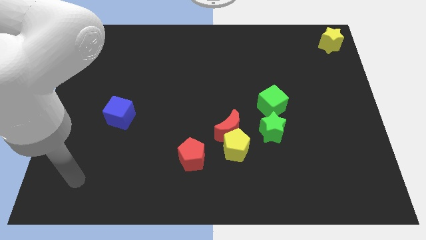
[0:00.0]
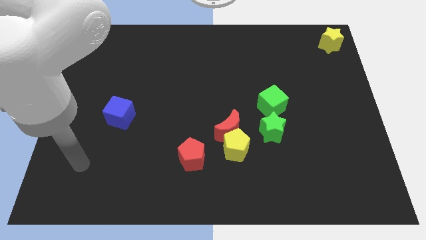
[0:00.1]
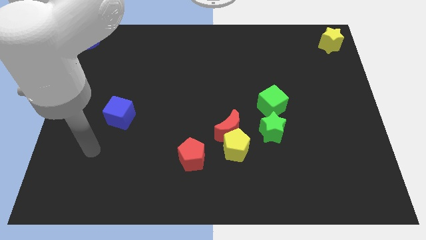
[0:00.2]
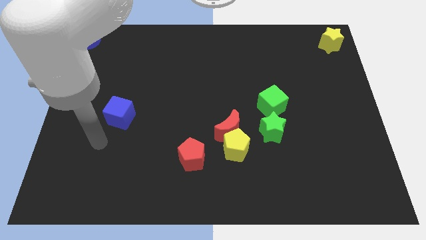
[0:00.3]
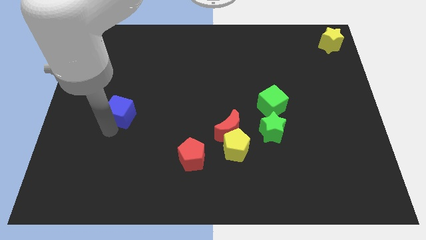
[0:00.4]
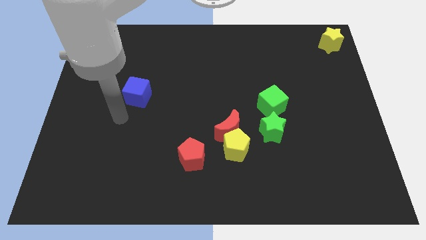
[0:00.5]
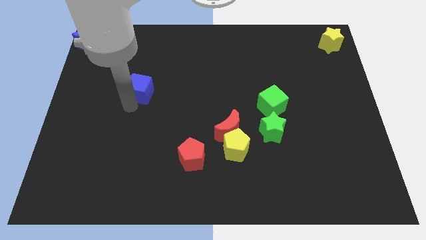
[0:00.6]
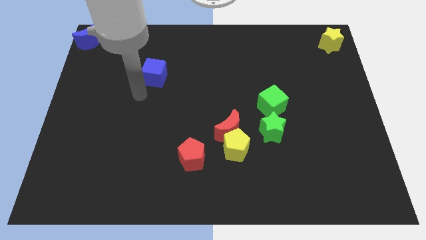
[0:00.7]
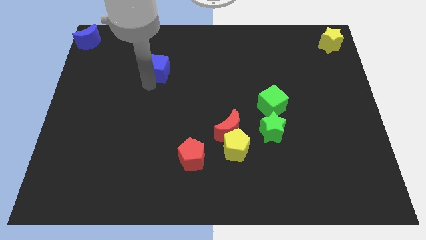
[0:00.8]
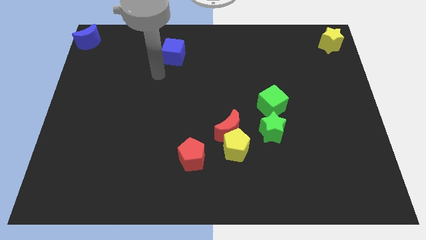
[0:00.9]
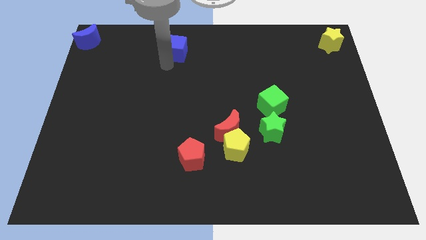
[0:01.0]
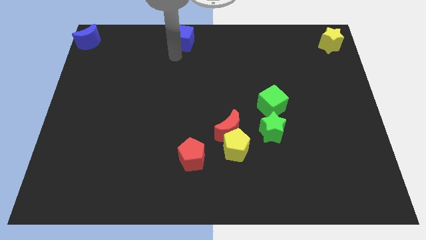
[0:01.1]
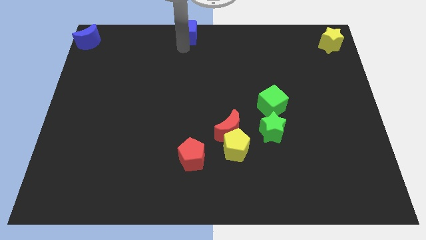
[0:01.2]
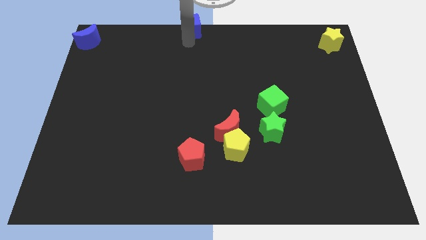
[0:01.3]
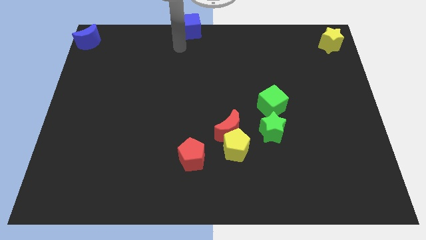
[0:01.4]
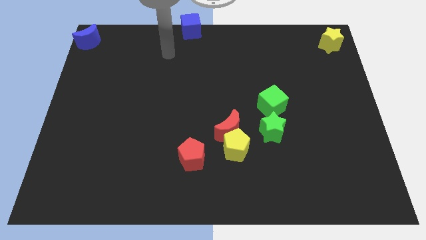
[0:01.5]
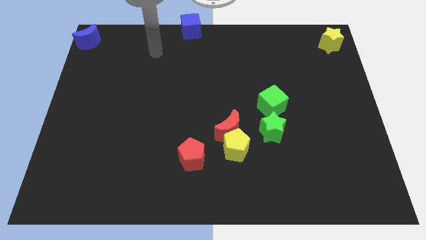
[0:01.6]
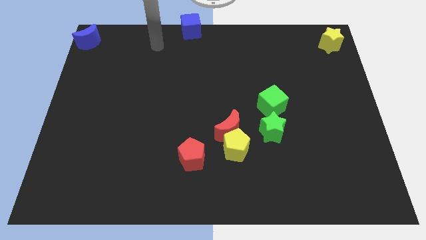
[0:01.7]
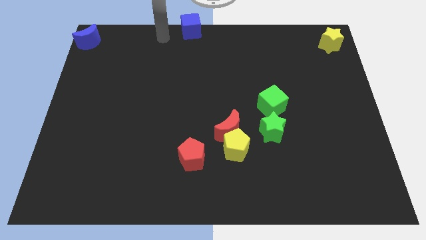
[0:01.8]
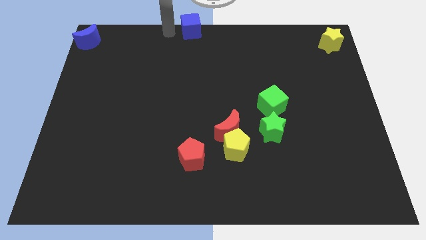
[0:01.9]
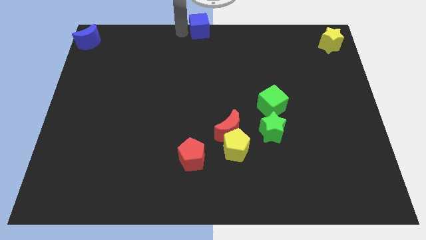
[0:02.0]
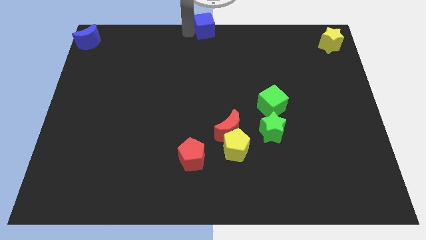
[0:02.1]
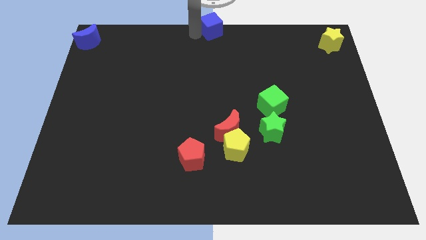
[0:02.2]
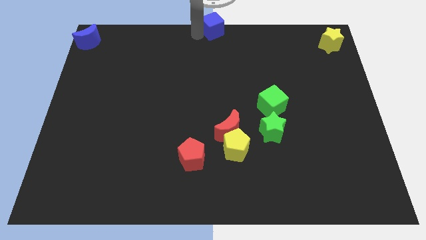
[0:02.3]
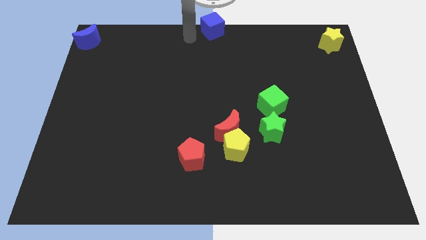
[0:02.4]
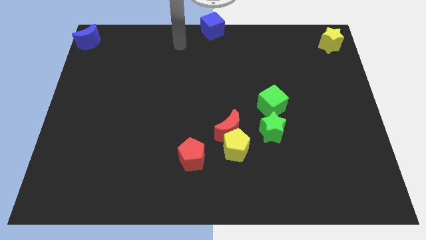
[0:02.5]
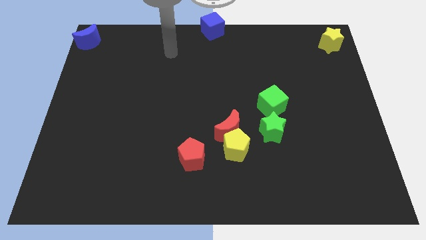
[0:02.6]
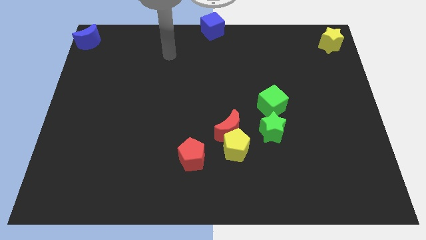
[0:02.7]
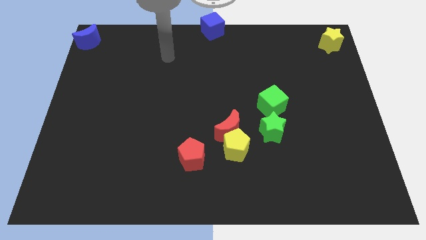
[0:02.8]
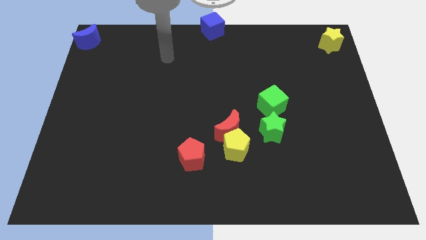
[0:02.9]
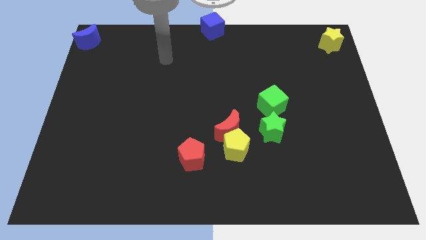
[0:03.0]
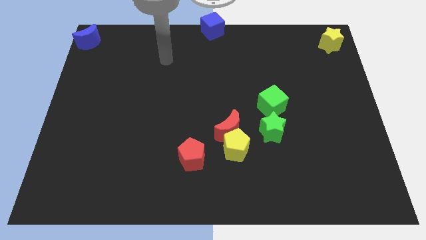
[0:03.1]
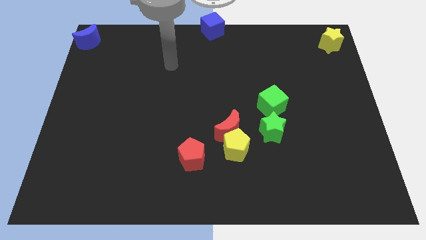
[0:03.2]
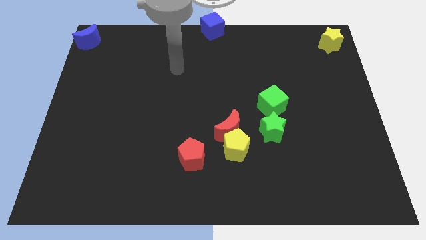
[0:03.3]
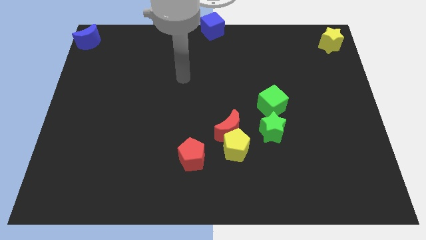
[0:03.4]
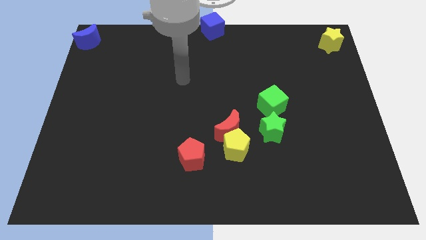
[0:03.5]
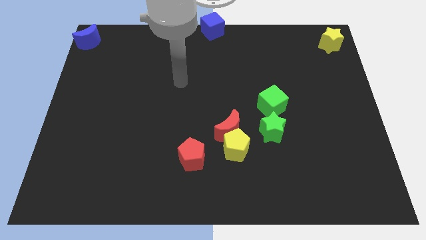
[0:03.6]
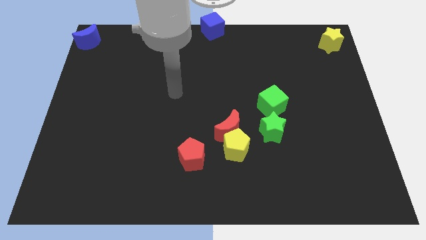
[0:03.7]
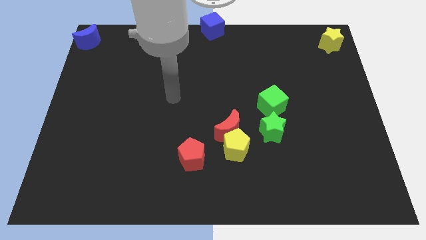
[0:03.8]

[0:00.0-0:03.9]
place the blue cube at the top center of the board

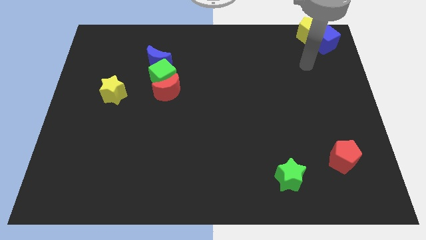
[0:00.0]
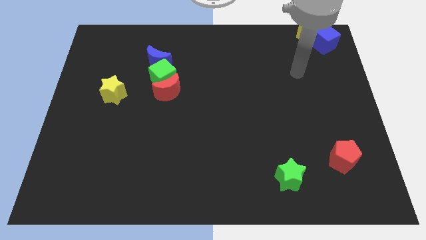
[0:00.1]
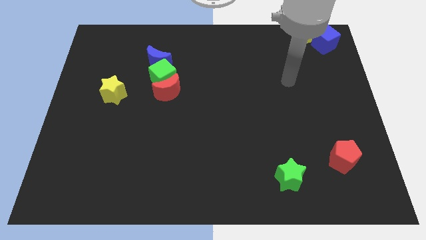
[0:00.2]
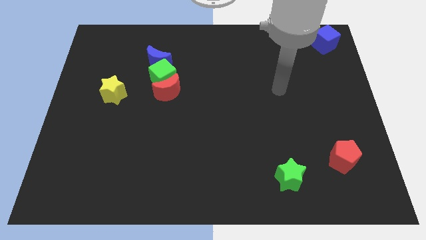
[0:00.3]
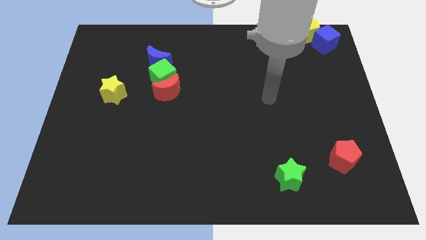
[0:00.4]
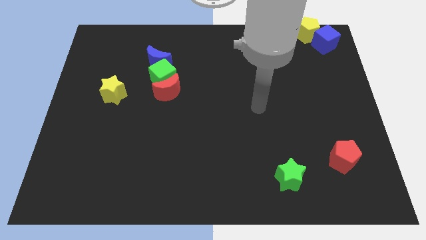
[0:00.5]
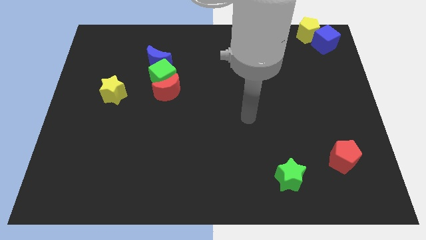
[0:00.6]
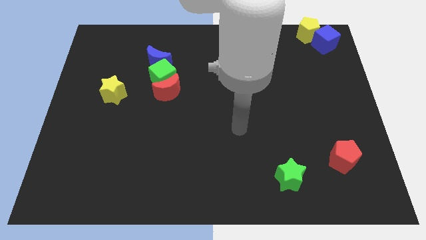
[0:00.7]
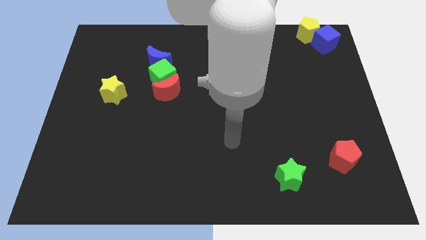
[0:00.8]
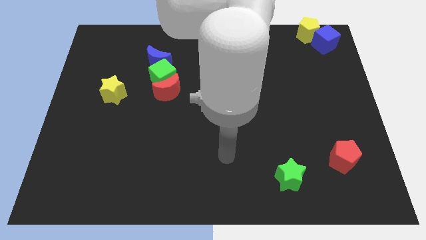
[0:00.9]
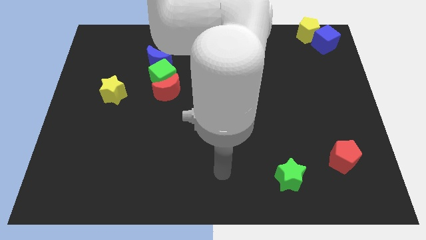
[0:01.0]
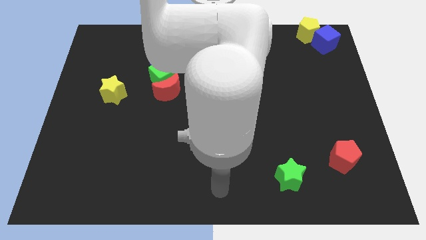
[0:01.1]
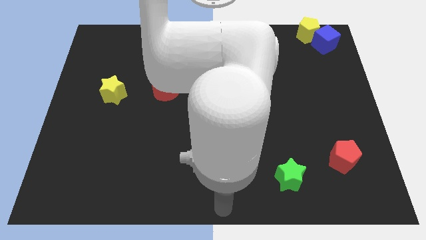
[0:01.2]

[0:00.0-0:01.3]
move your arm to the bottom center of the board

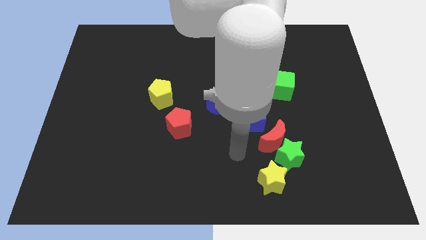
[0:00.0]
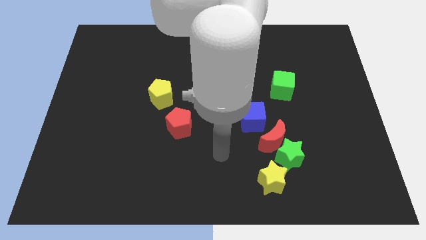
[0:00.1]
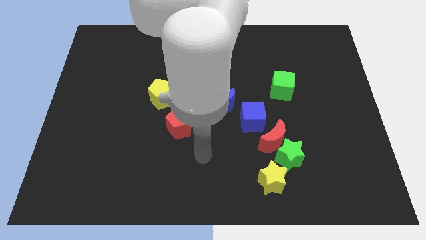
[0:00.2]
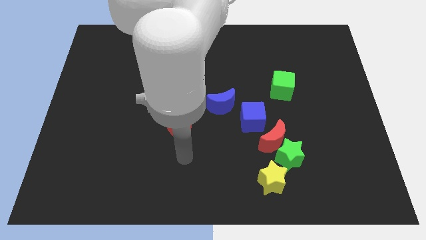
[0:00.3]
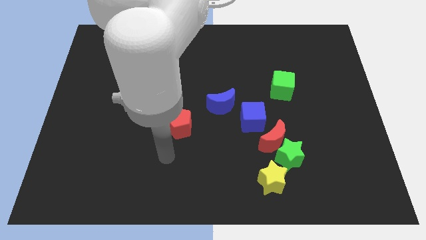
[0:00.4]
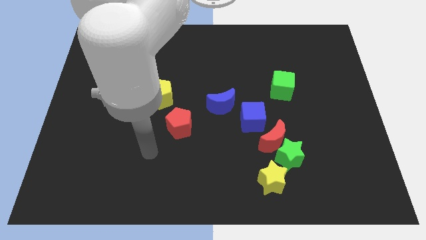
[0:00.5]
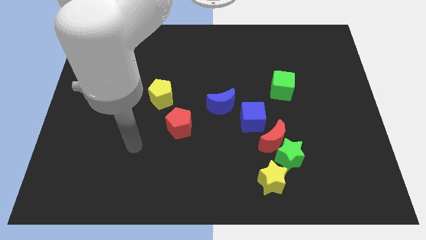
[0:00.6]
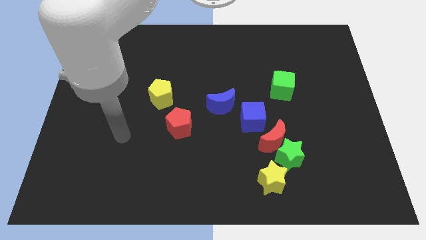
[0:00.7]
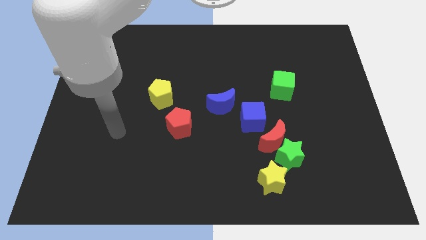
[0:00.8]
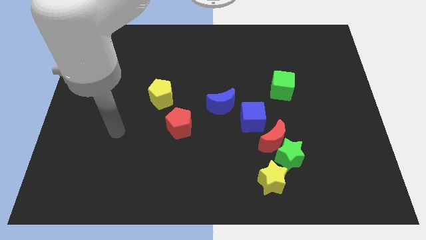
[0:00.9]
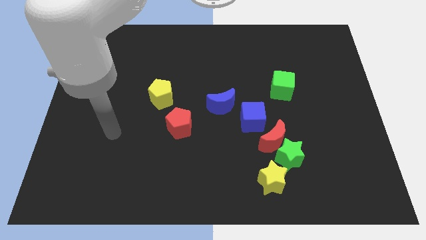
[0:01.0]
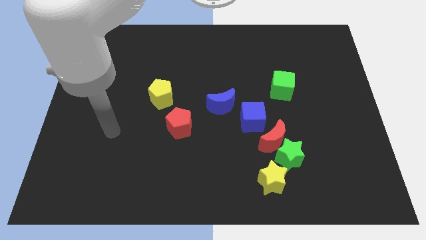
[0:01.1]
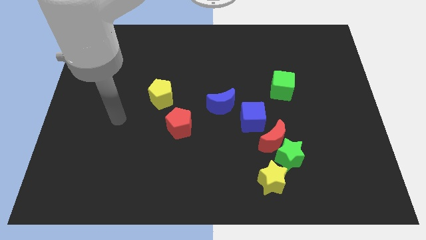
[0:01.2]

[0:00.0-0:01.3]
point the arm to the left of the board

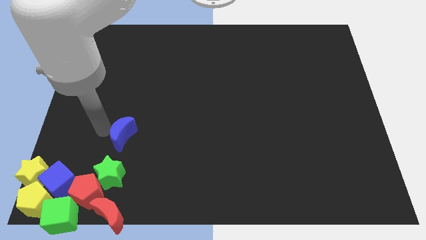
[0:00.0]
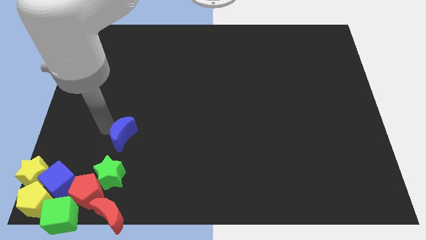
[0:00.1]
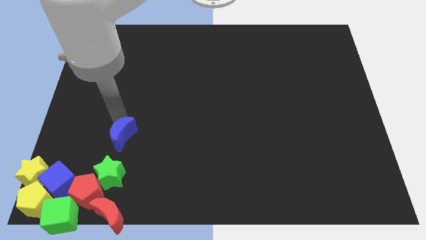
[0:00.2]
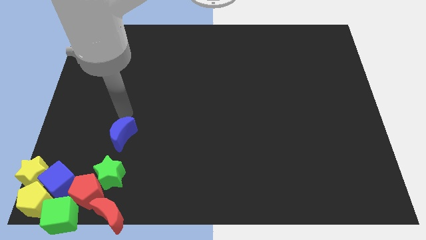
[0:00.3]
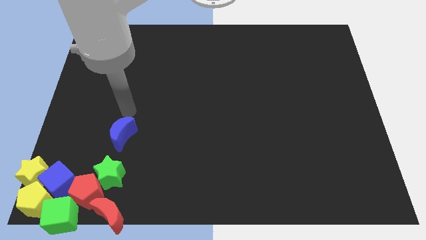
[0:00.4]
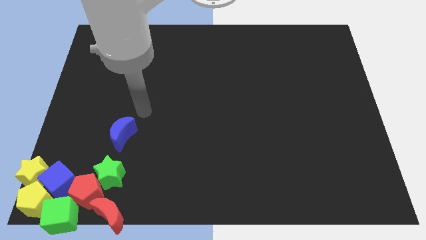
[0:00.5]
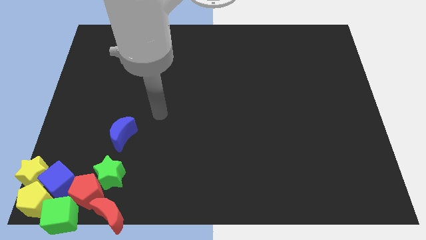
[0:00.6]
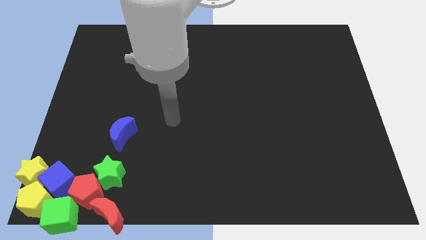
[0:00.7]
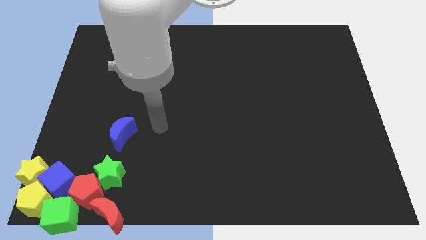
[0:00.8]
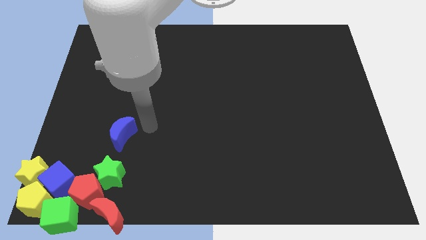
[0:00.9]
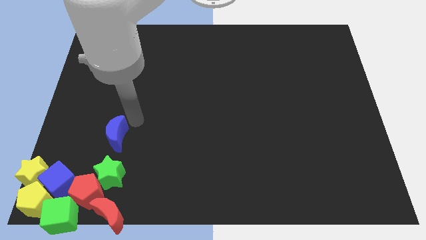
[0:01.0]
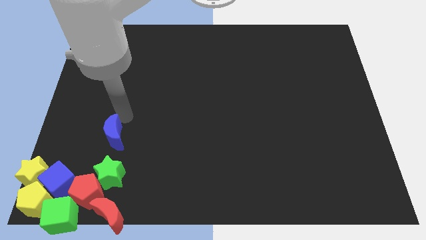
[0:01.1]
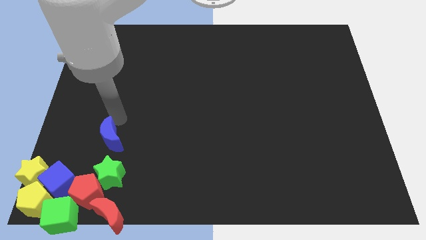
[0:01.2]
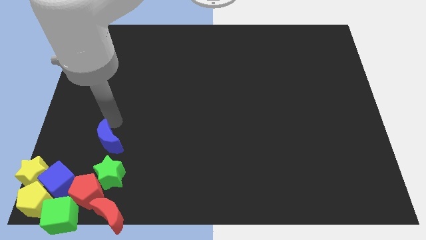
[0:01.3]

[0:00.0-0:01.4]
move the blue crescent to the top of the green star

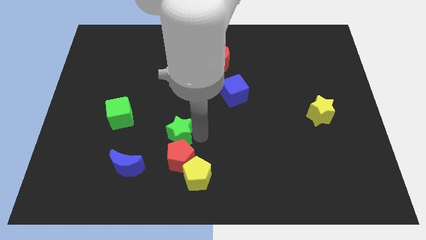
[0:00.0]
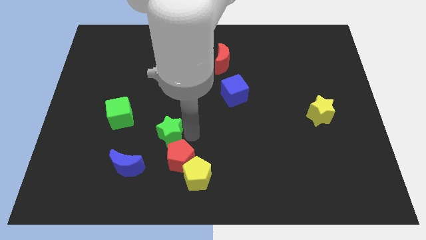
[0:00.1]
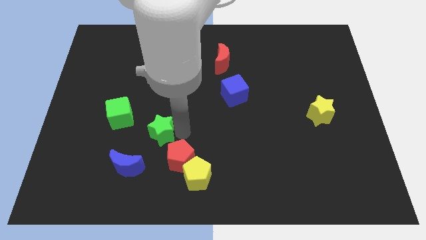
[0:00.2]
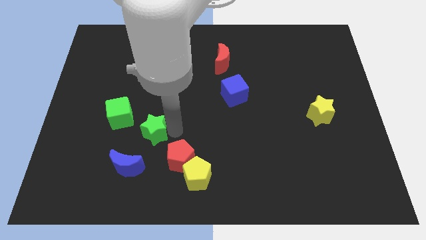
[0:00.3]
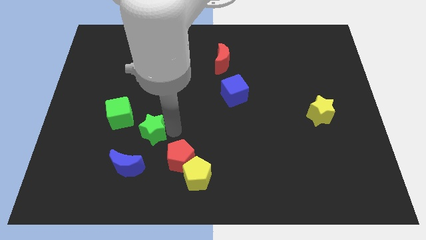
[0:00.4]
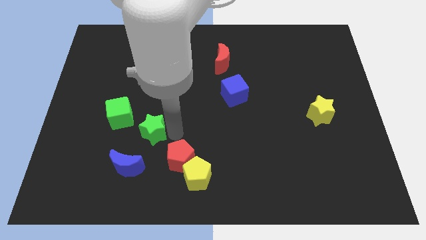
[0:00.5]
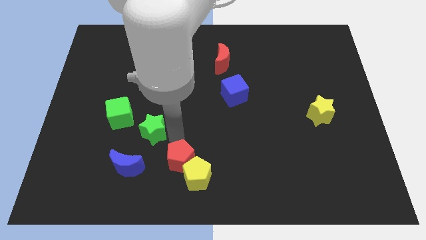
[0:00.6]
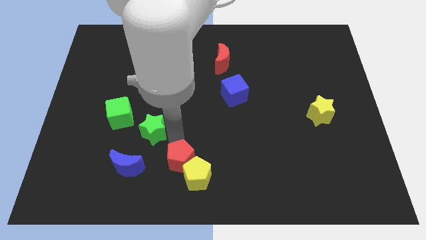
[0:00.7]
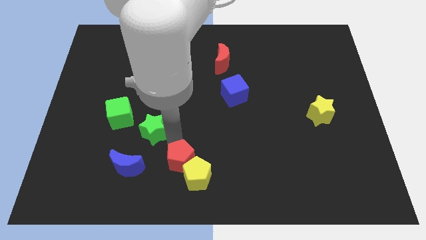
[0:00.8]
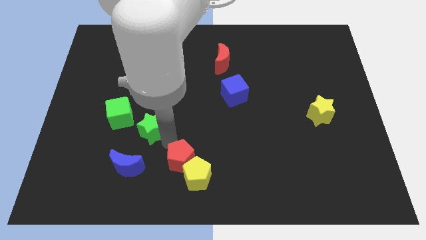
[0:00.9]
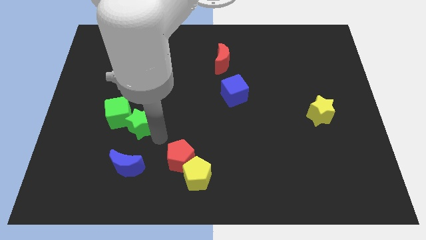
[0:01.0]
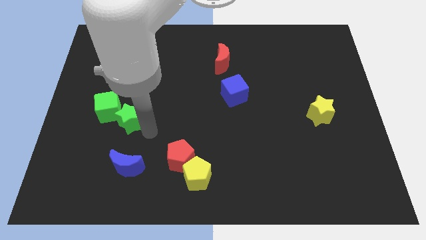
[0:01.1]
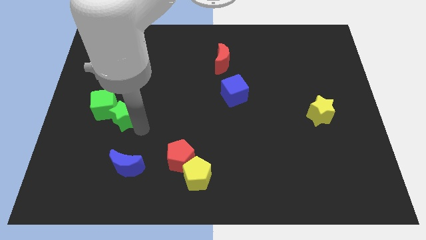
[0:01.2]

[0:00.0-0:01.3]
push the green star into the green cube
